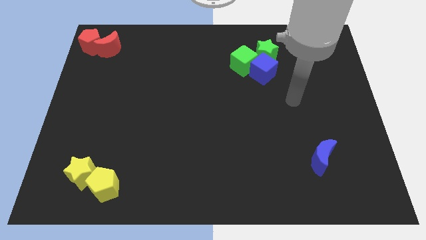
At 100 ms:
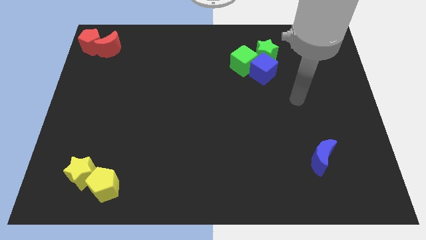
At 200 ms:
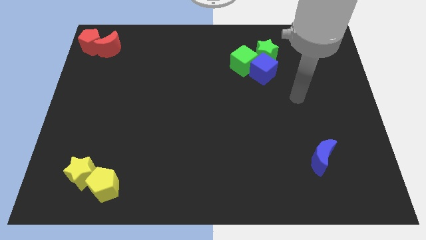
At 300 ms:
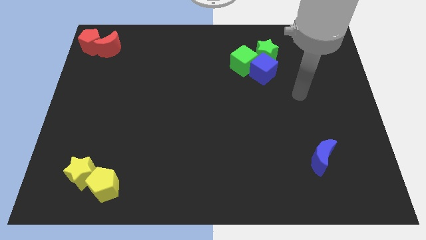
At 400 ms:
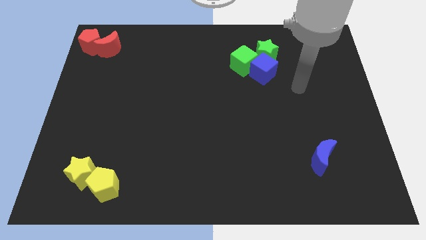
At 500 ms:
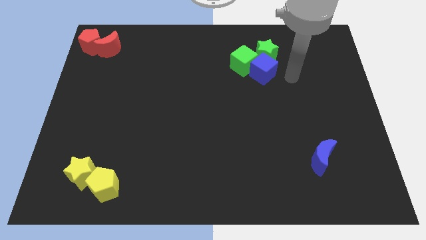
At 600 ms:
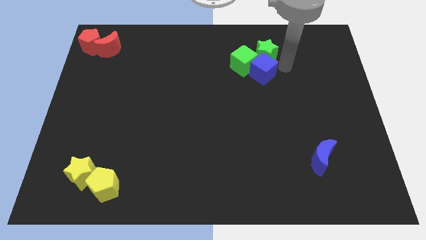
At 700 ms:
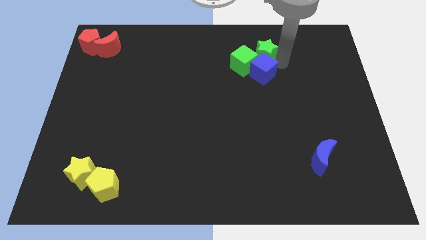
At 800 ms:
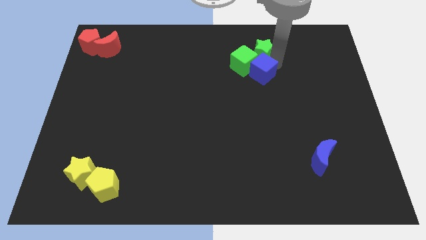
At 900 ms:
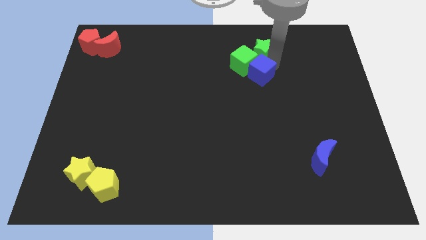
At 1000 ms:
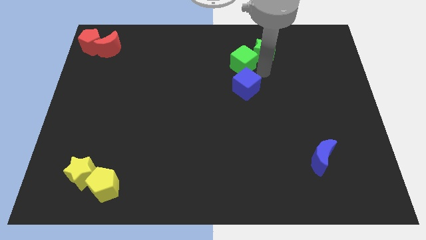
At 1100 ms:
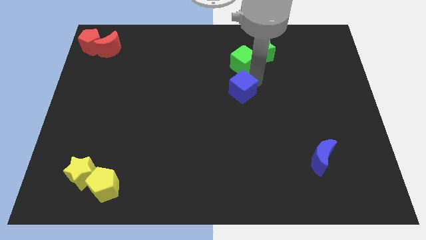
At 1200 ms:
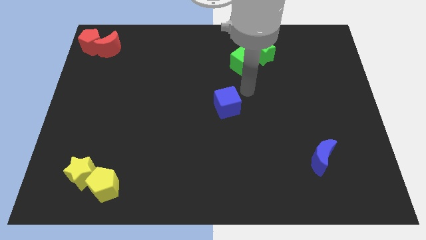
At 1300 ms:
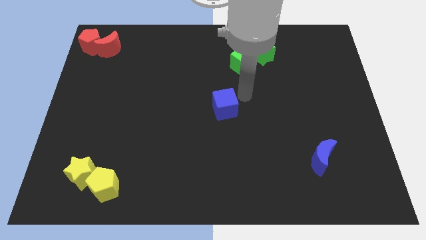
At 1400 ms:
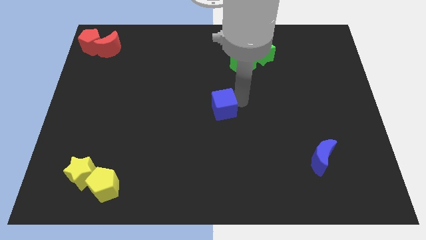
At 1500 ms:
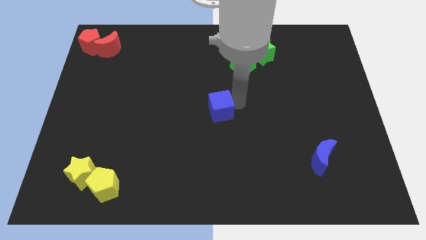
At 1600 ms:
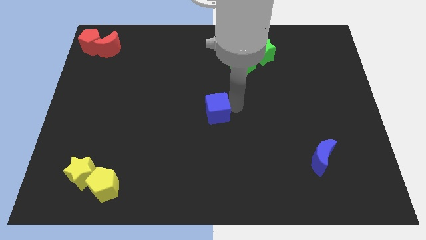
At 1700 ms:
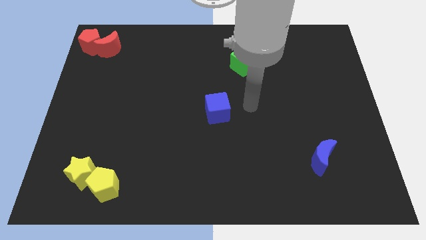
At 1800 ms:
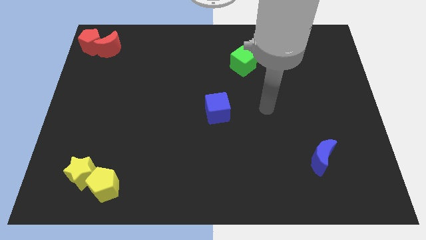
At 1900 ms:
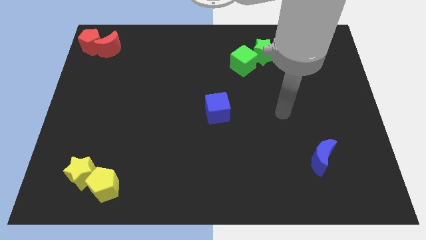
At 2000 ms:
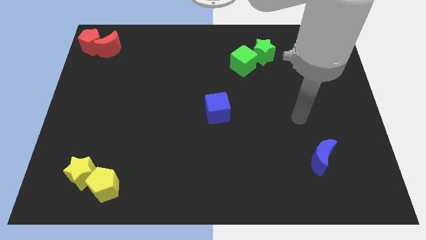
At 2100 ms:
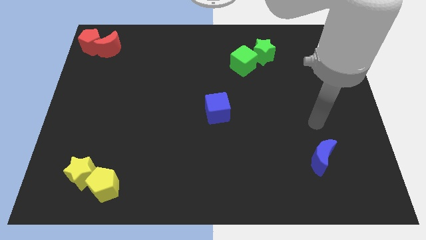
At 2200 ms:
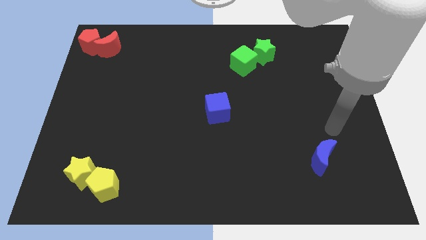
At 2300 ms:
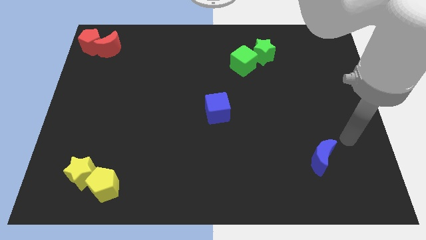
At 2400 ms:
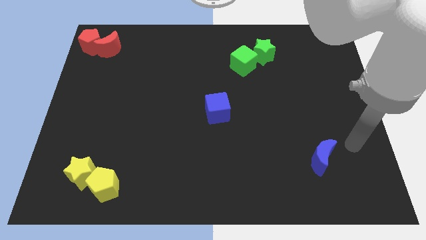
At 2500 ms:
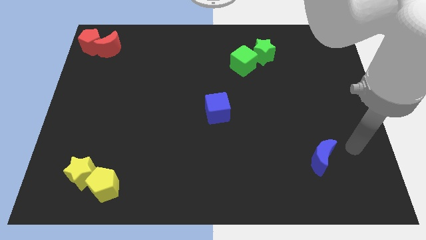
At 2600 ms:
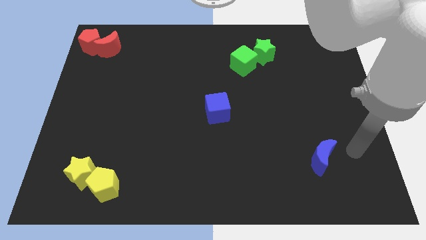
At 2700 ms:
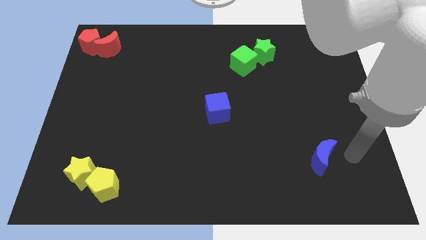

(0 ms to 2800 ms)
push blue cube to the center of the board

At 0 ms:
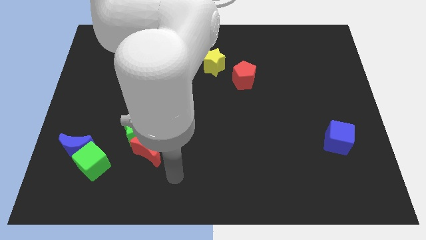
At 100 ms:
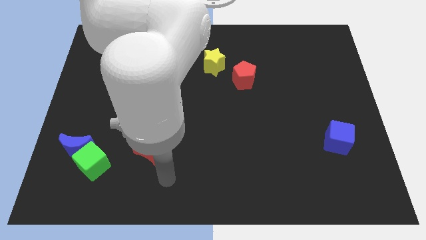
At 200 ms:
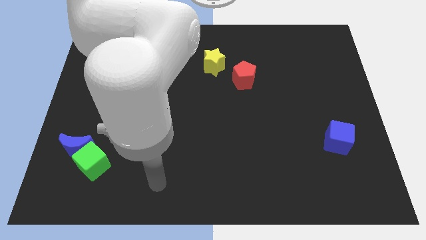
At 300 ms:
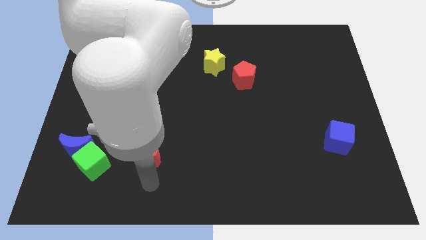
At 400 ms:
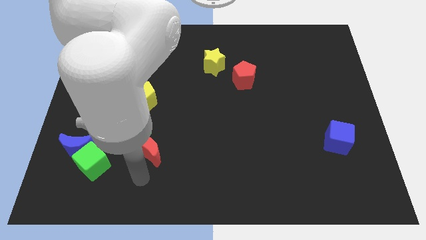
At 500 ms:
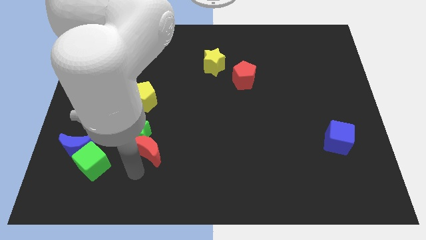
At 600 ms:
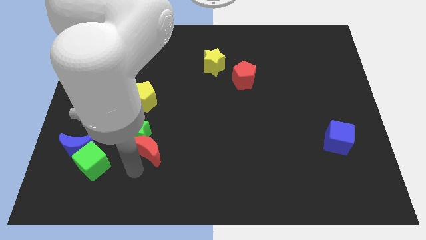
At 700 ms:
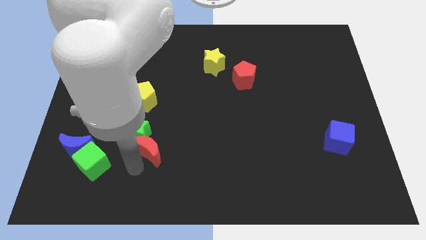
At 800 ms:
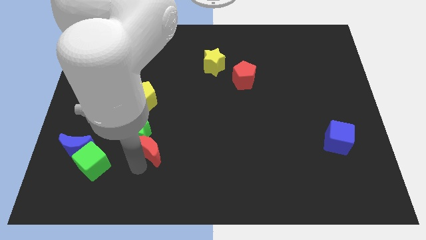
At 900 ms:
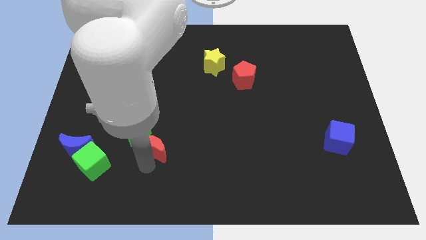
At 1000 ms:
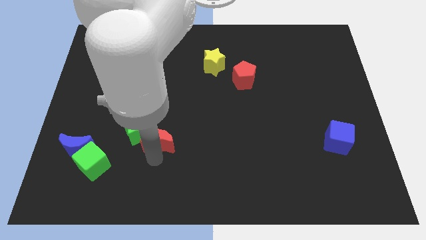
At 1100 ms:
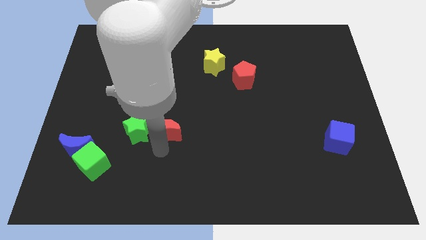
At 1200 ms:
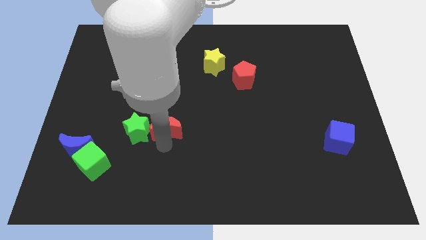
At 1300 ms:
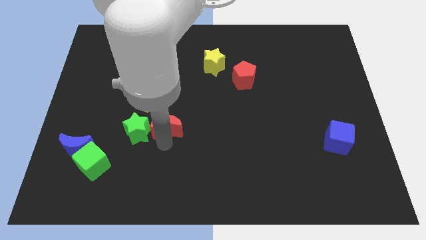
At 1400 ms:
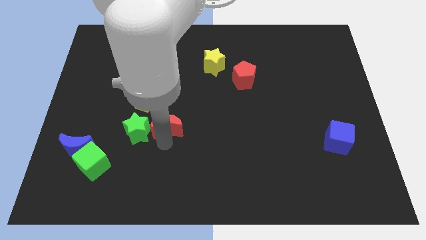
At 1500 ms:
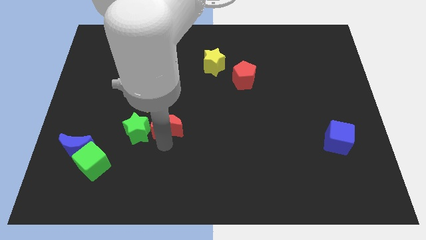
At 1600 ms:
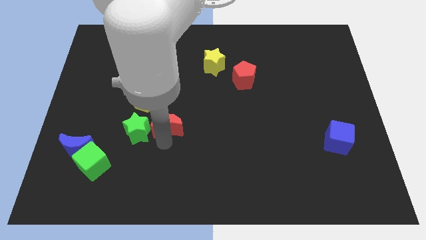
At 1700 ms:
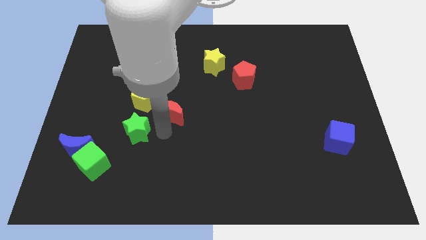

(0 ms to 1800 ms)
move the red crescent to the right side of the yellow pentagon

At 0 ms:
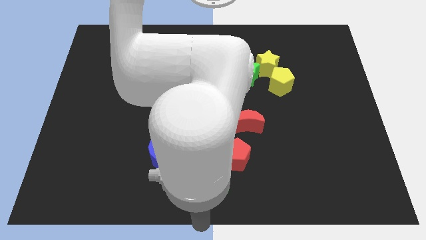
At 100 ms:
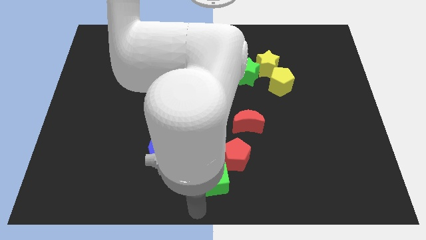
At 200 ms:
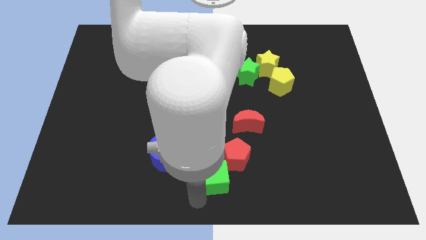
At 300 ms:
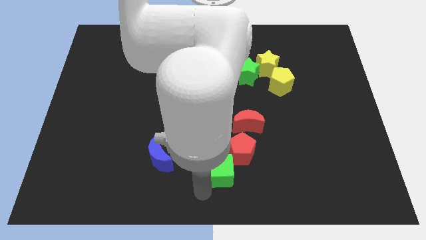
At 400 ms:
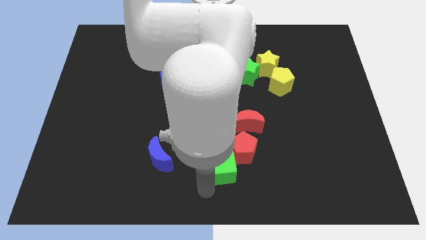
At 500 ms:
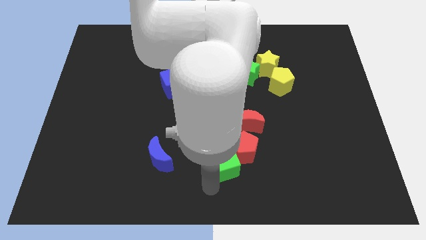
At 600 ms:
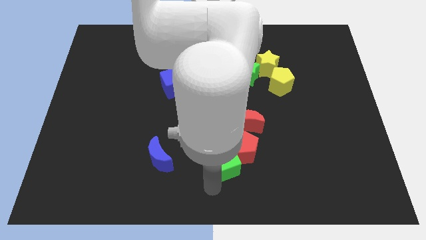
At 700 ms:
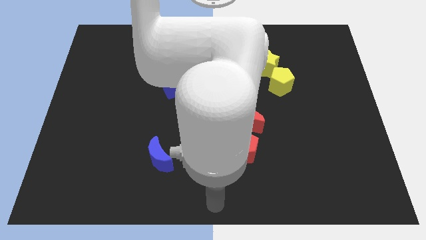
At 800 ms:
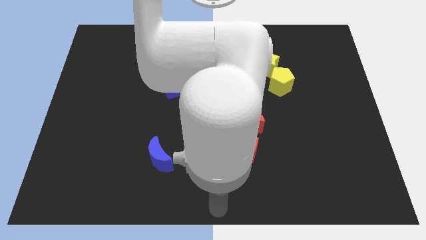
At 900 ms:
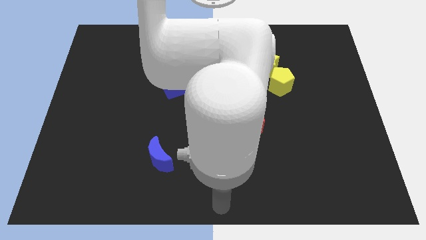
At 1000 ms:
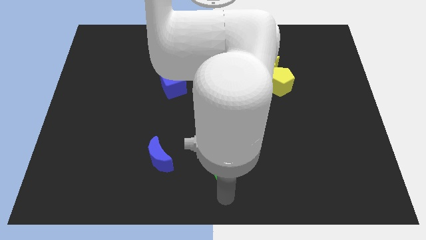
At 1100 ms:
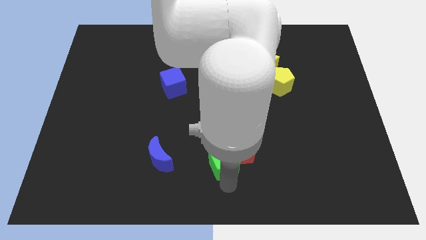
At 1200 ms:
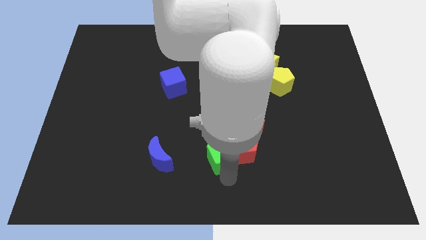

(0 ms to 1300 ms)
push the green cube below the red pentagon

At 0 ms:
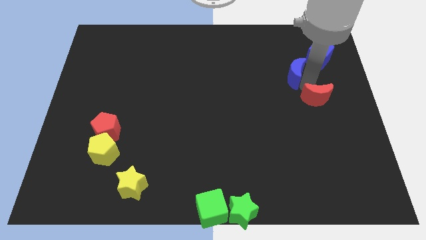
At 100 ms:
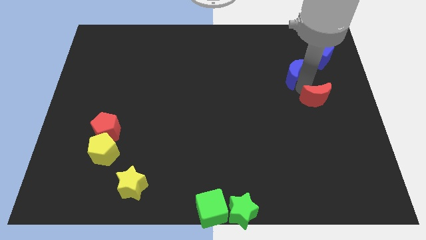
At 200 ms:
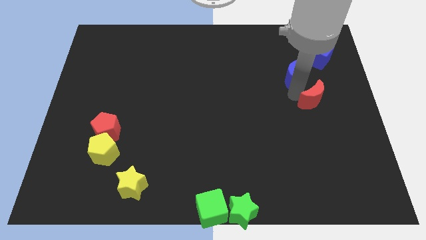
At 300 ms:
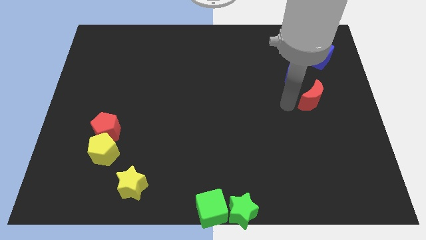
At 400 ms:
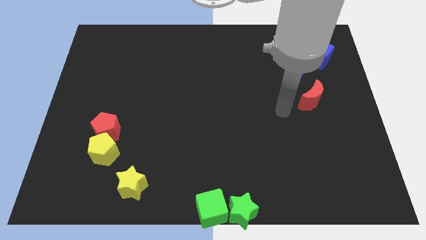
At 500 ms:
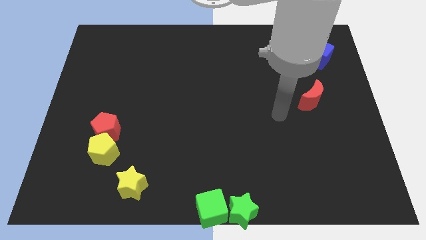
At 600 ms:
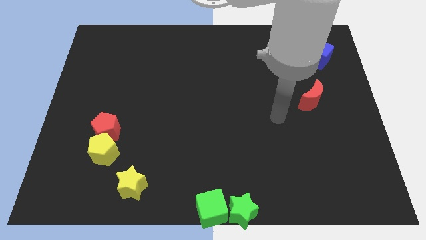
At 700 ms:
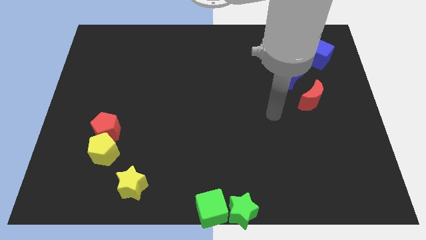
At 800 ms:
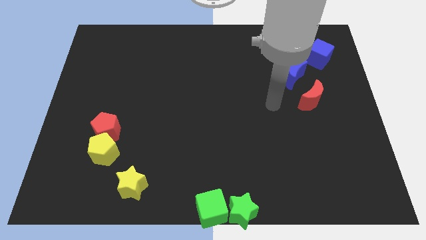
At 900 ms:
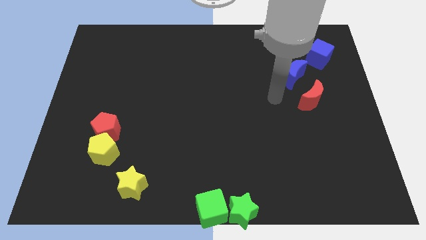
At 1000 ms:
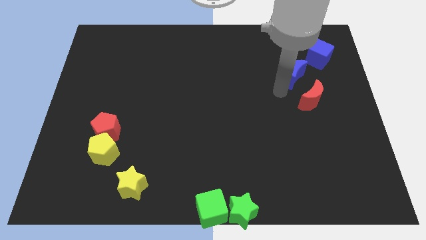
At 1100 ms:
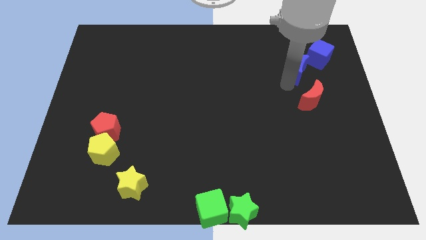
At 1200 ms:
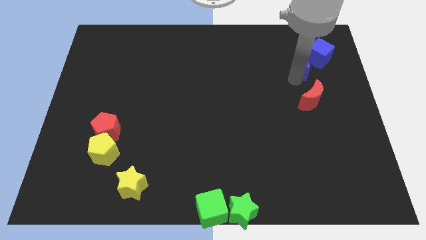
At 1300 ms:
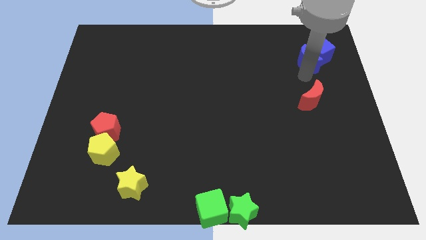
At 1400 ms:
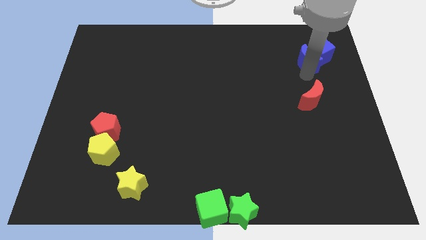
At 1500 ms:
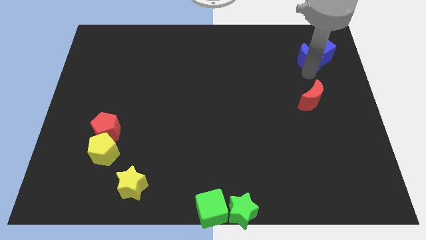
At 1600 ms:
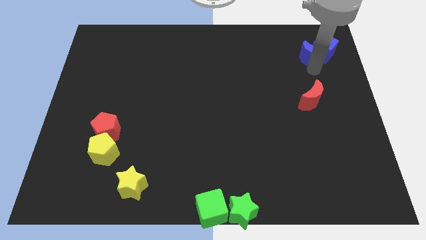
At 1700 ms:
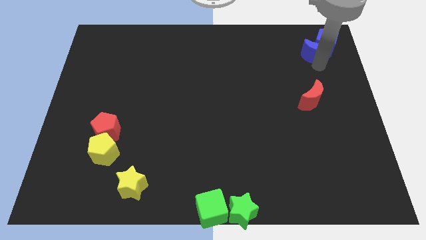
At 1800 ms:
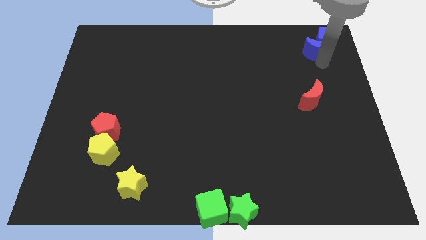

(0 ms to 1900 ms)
push the blue blocks towards the top right side of the board

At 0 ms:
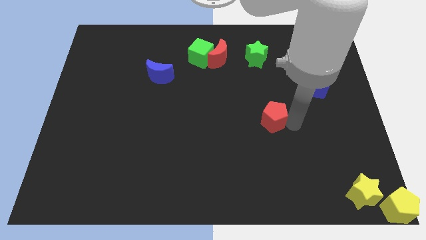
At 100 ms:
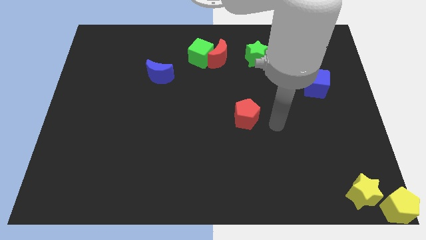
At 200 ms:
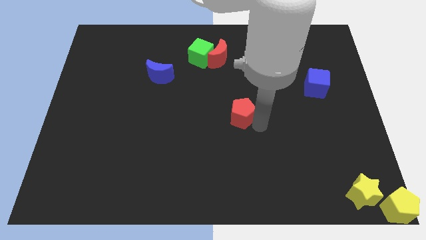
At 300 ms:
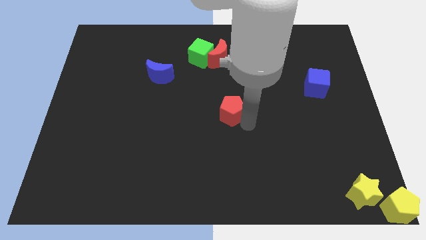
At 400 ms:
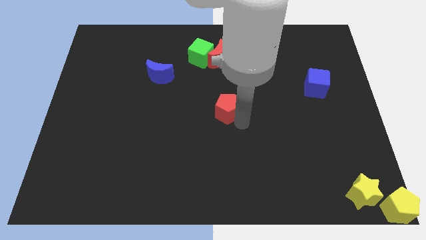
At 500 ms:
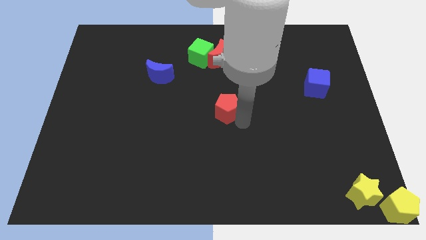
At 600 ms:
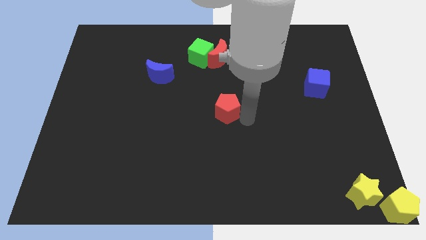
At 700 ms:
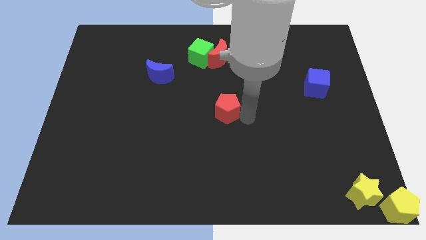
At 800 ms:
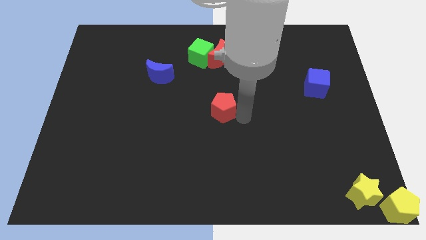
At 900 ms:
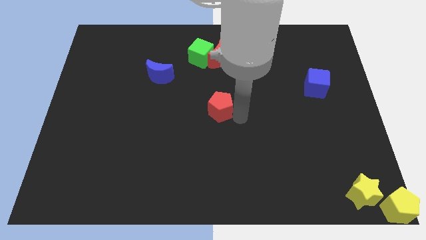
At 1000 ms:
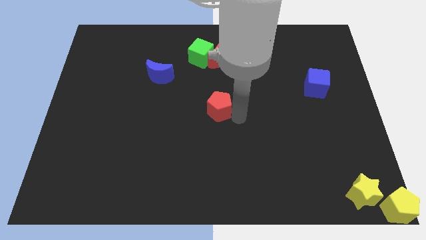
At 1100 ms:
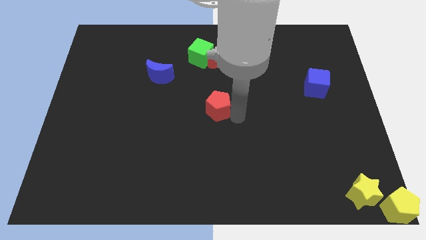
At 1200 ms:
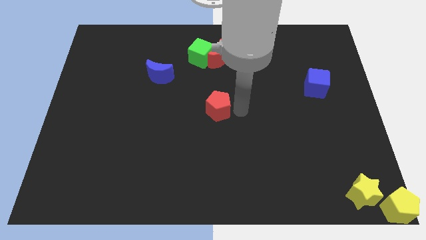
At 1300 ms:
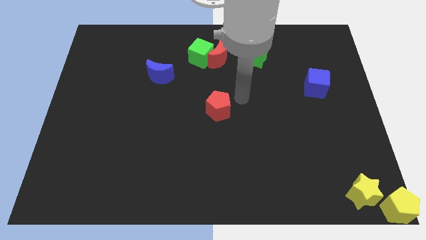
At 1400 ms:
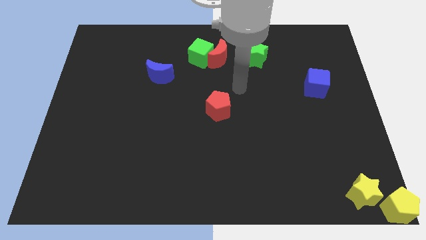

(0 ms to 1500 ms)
move the red pentagon to the center of the board
